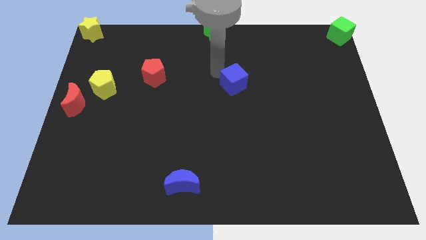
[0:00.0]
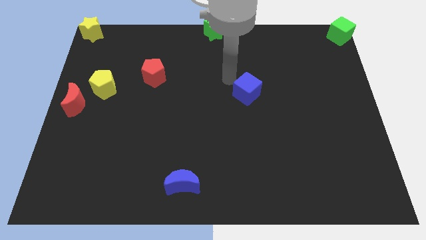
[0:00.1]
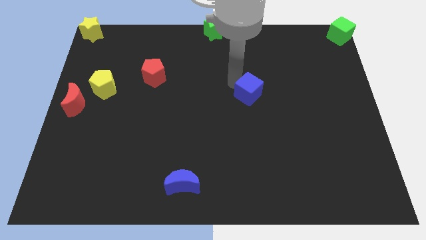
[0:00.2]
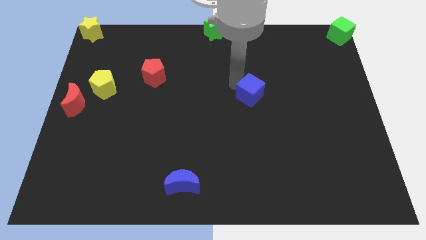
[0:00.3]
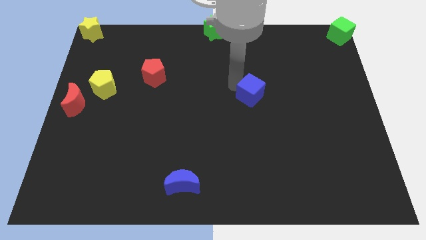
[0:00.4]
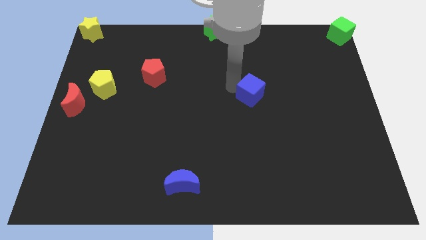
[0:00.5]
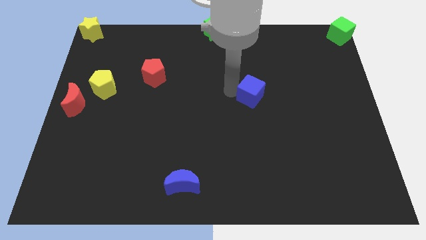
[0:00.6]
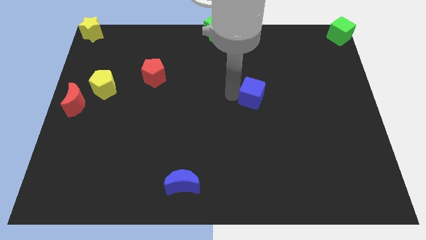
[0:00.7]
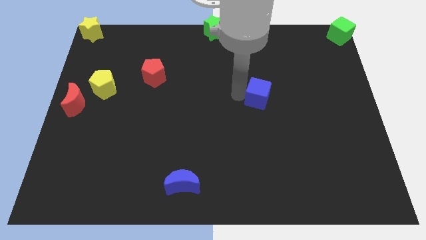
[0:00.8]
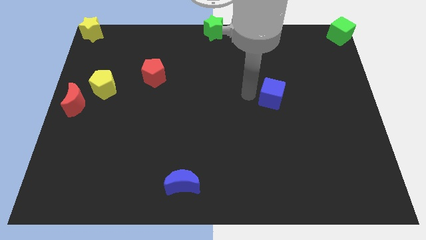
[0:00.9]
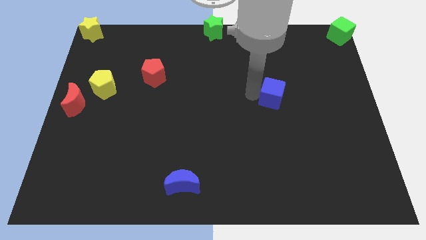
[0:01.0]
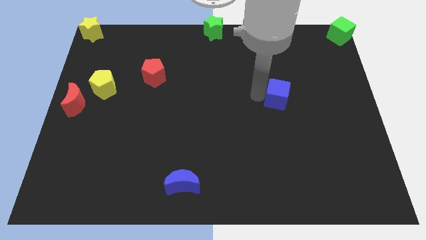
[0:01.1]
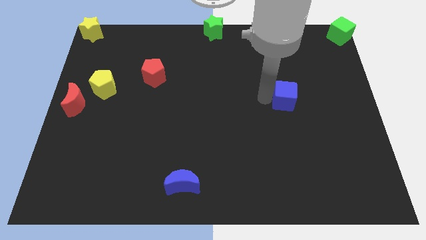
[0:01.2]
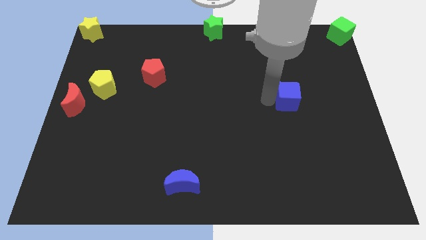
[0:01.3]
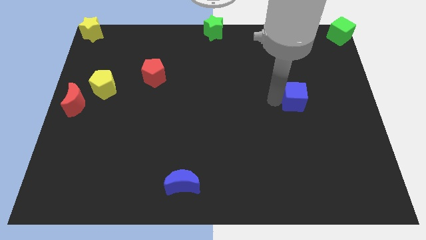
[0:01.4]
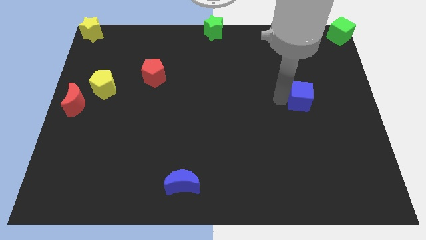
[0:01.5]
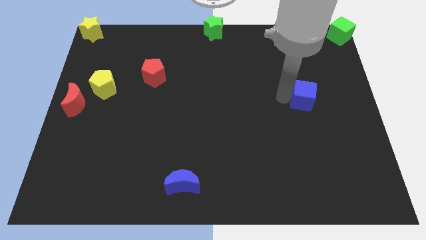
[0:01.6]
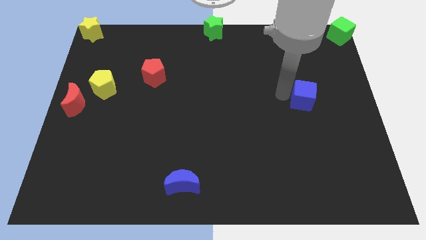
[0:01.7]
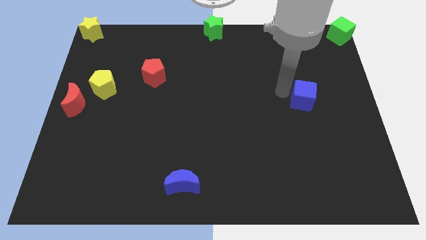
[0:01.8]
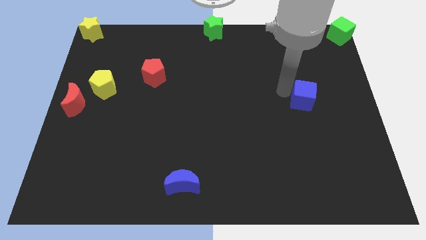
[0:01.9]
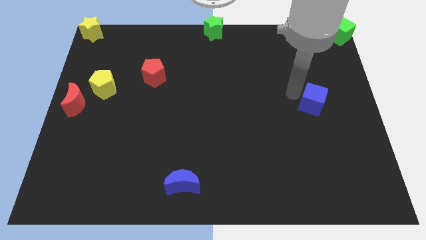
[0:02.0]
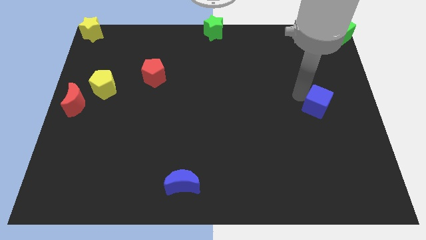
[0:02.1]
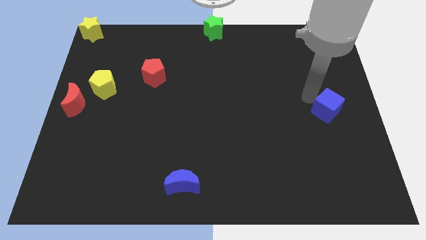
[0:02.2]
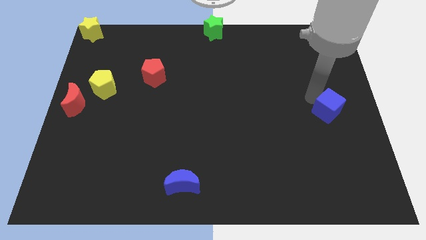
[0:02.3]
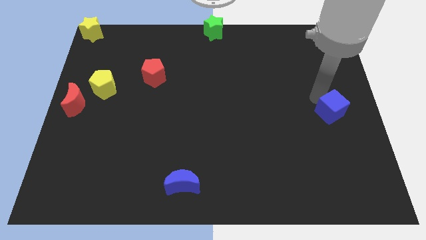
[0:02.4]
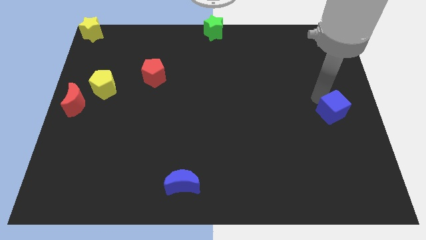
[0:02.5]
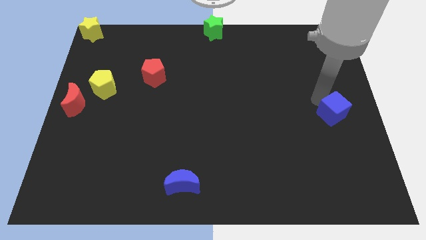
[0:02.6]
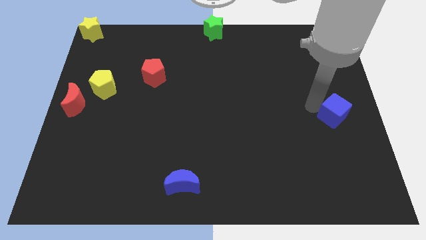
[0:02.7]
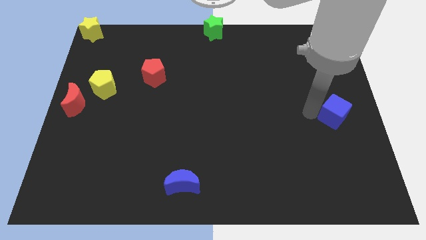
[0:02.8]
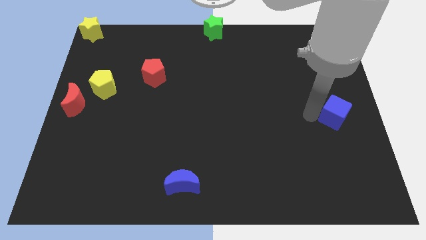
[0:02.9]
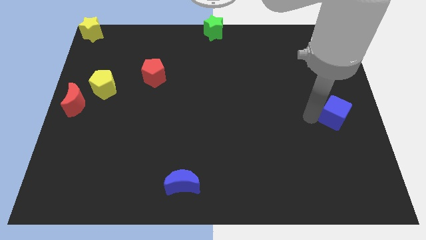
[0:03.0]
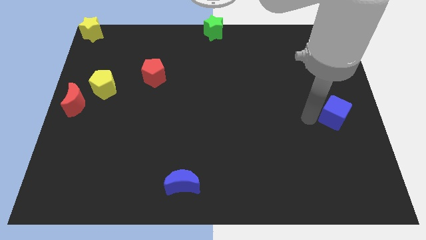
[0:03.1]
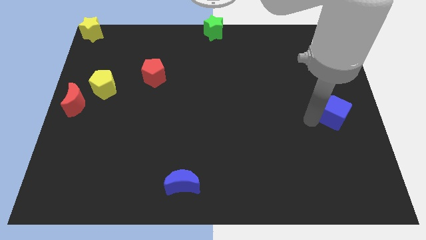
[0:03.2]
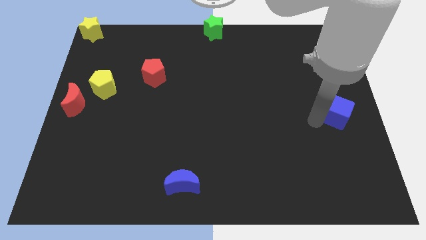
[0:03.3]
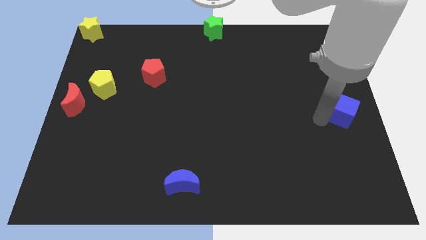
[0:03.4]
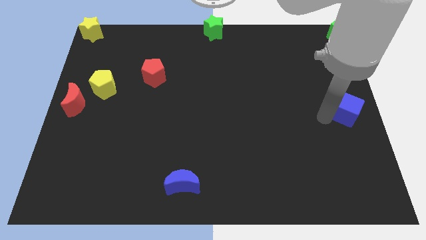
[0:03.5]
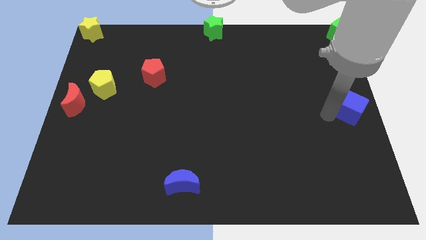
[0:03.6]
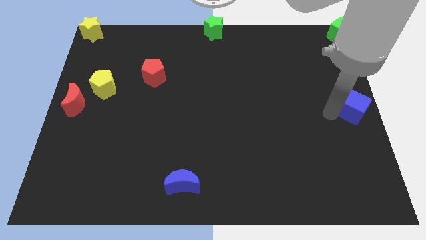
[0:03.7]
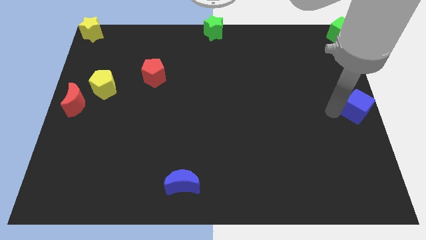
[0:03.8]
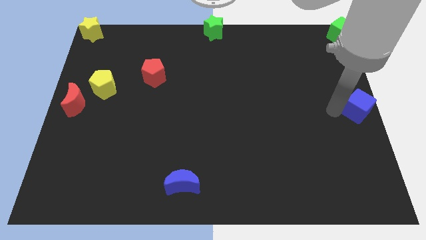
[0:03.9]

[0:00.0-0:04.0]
place blue cube towards the right middle end of the board

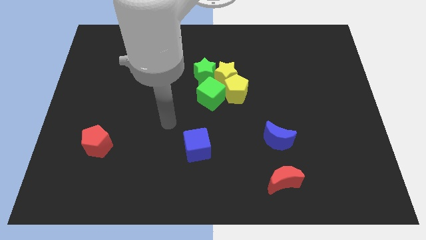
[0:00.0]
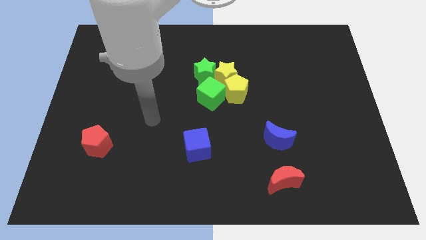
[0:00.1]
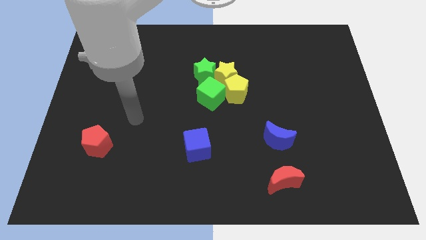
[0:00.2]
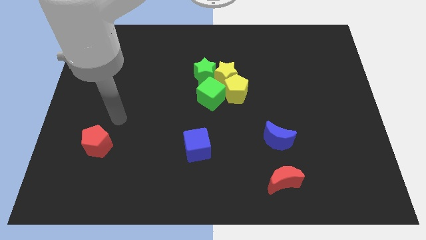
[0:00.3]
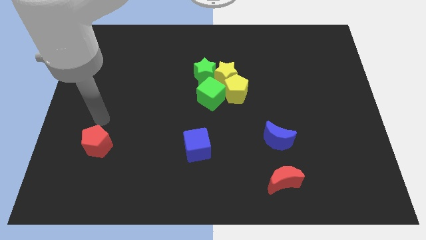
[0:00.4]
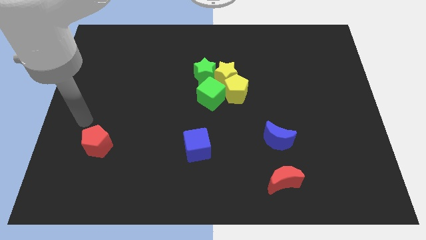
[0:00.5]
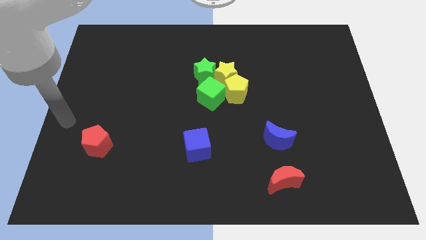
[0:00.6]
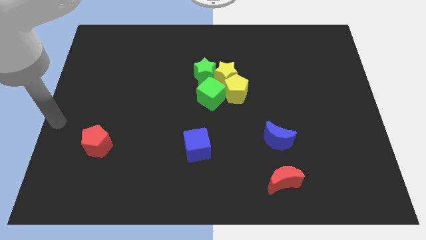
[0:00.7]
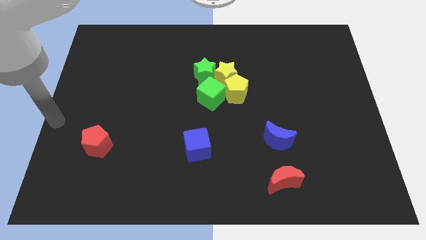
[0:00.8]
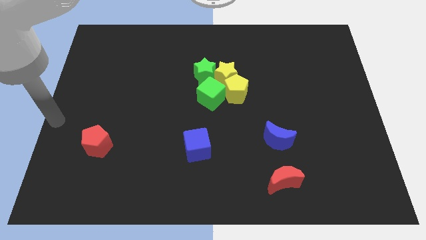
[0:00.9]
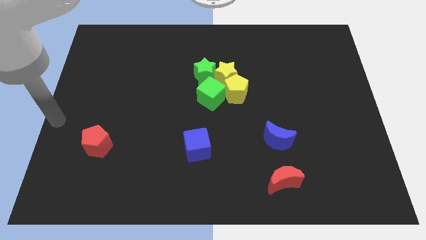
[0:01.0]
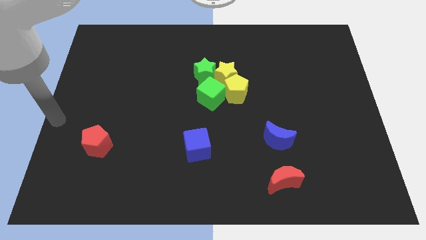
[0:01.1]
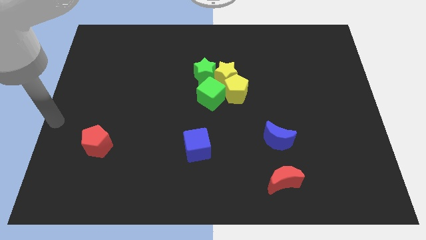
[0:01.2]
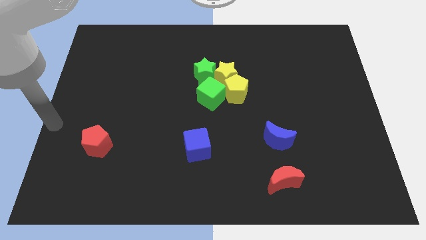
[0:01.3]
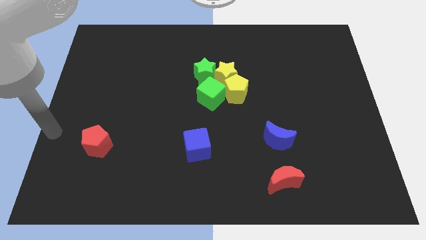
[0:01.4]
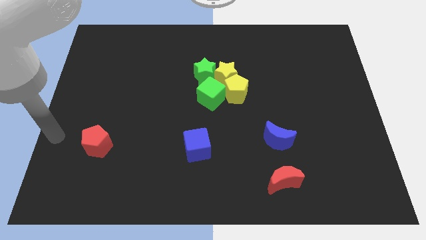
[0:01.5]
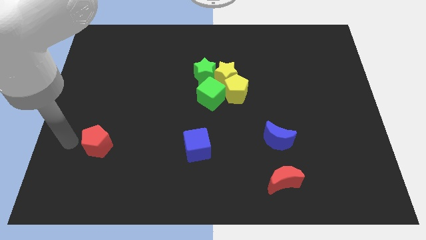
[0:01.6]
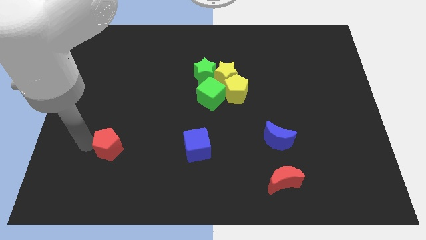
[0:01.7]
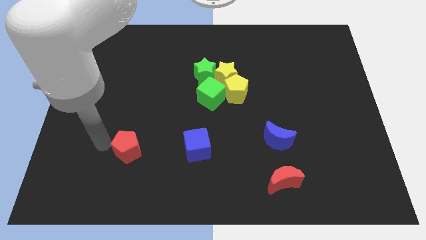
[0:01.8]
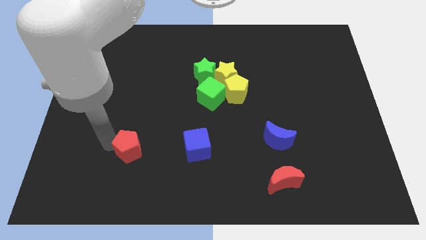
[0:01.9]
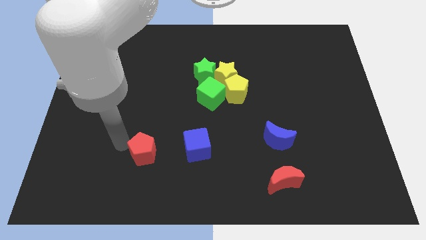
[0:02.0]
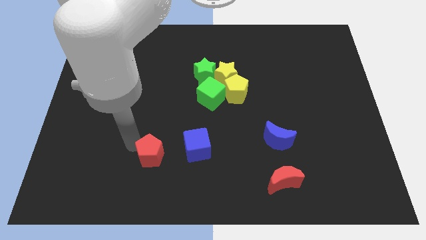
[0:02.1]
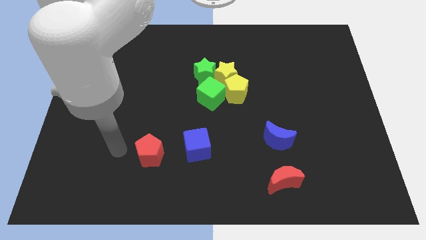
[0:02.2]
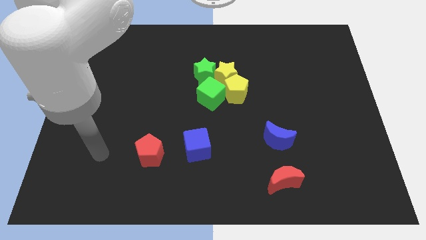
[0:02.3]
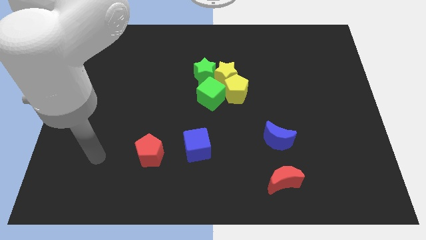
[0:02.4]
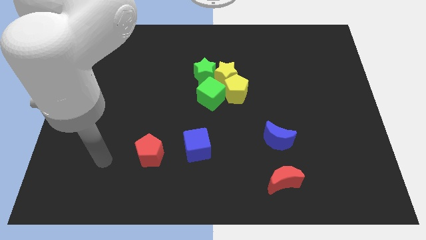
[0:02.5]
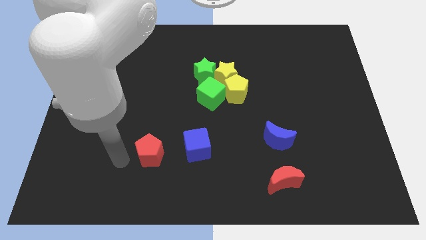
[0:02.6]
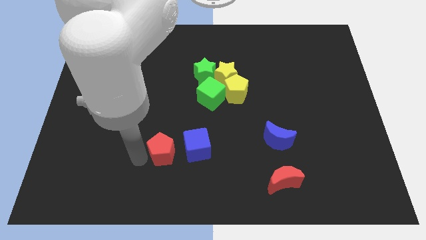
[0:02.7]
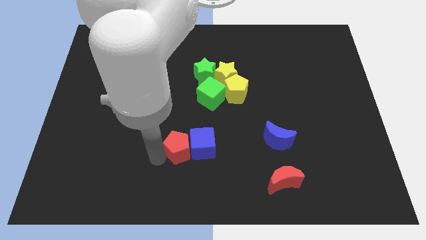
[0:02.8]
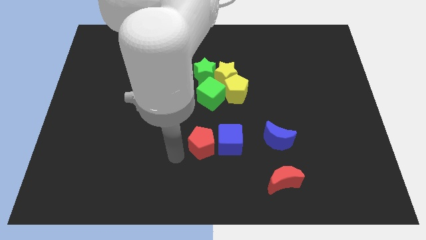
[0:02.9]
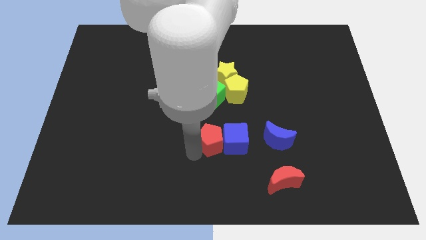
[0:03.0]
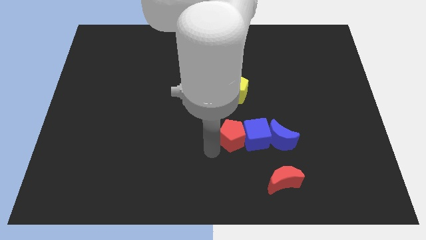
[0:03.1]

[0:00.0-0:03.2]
push the red pentagon into the blue cube

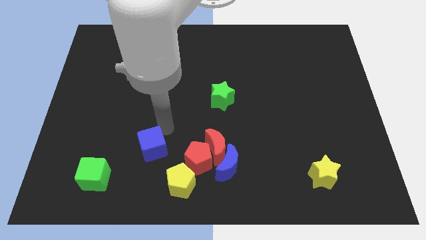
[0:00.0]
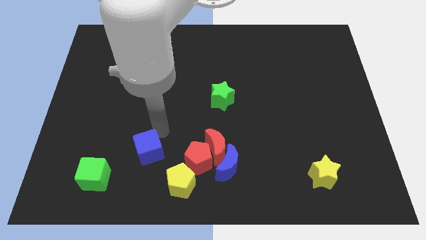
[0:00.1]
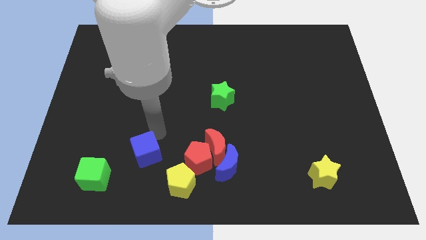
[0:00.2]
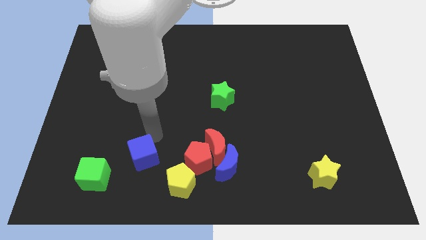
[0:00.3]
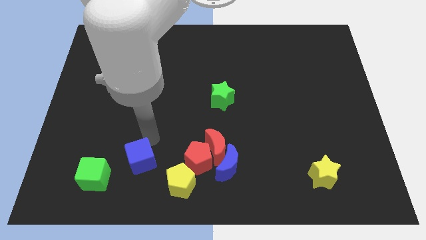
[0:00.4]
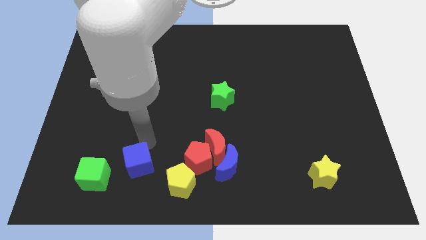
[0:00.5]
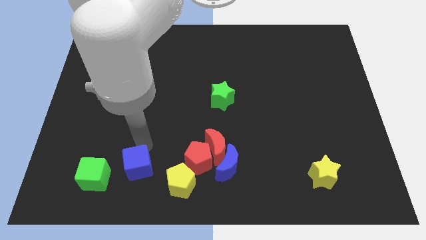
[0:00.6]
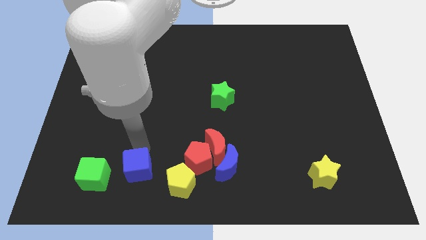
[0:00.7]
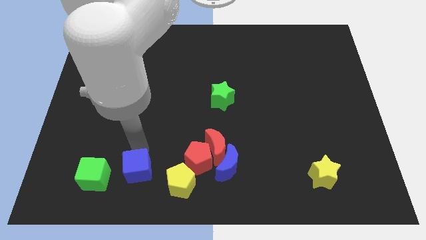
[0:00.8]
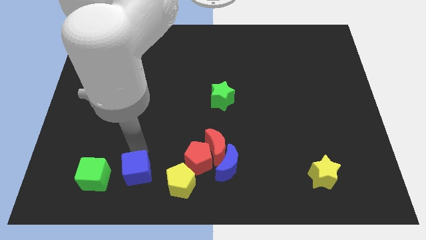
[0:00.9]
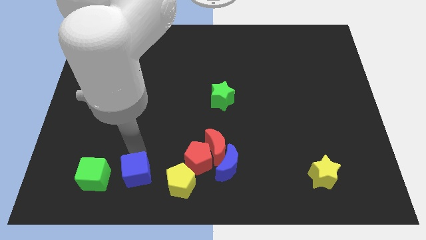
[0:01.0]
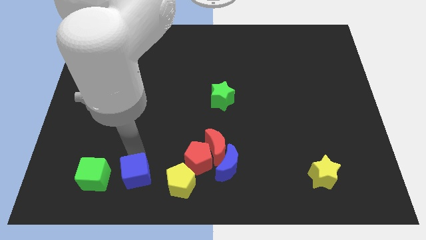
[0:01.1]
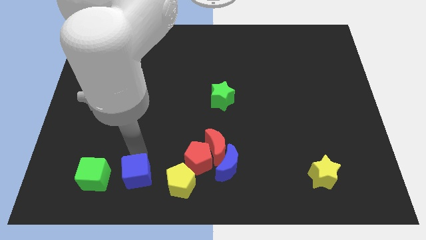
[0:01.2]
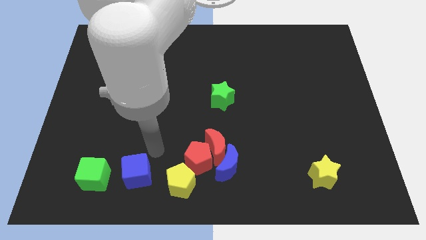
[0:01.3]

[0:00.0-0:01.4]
place the blue cube to the right side of the green cube

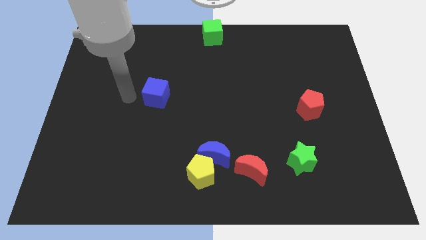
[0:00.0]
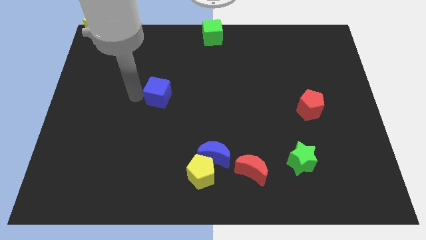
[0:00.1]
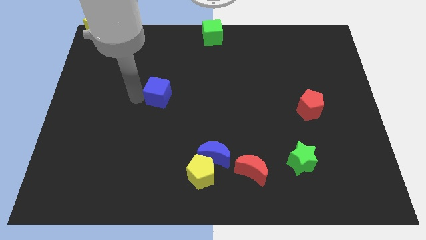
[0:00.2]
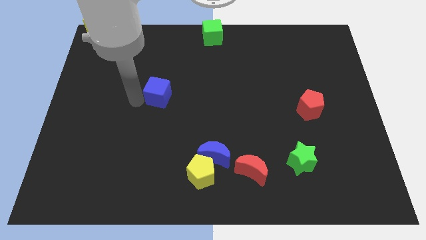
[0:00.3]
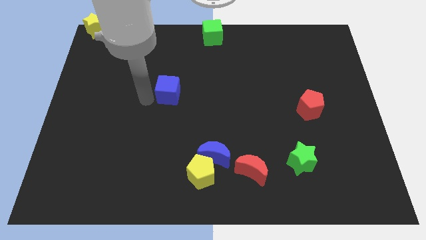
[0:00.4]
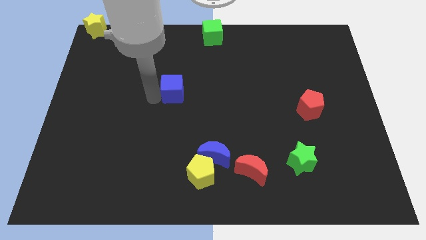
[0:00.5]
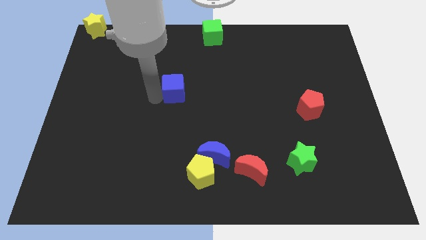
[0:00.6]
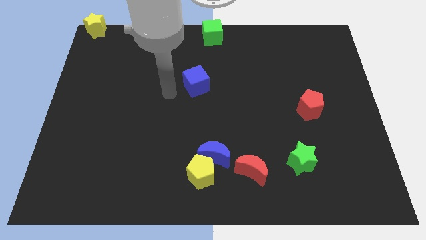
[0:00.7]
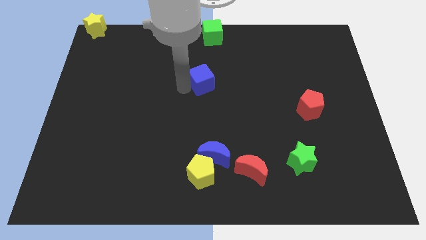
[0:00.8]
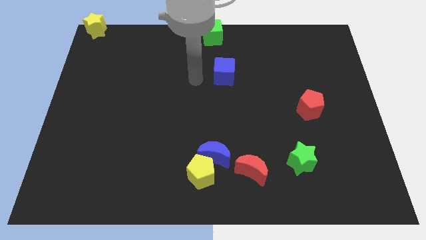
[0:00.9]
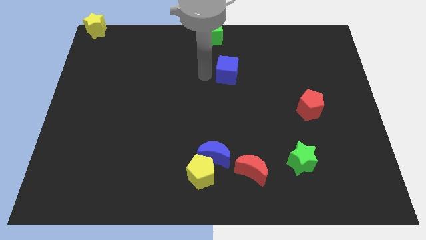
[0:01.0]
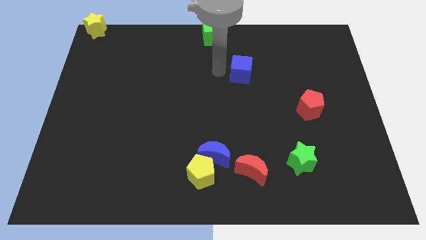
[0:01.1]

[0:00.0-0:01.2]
push blue cube to the right side of the board
